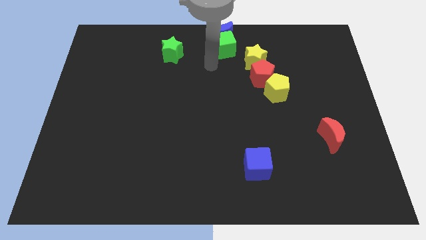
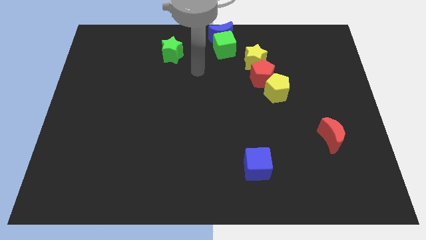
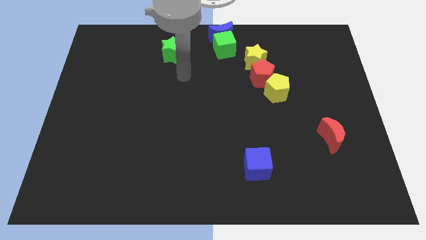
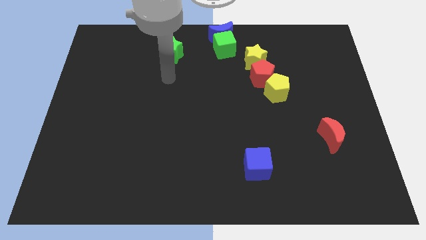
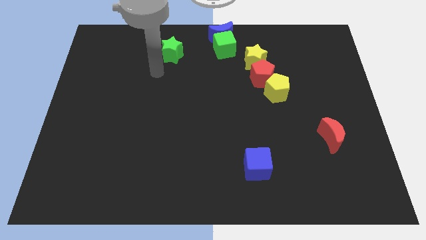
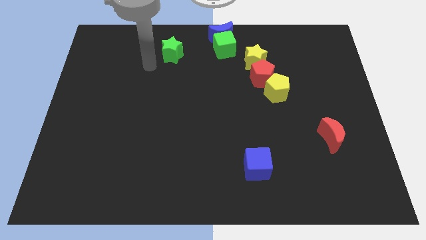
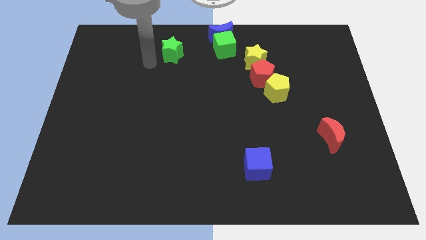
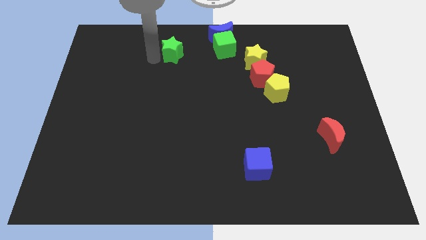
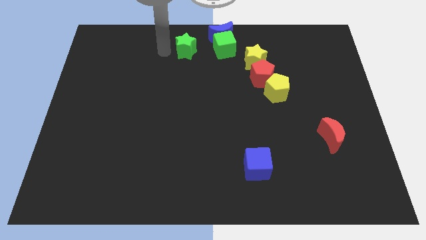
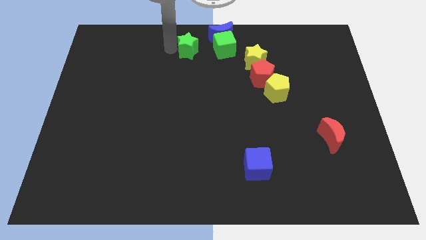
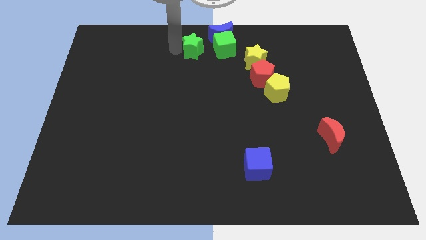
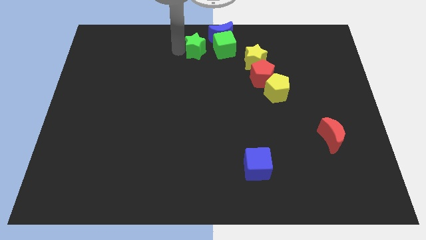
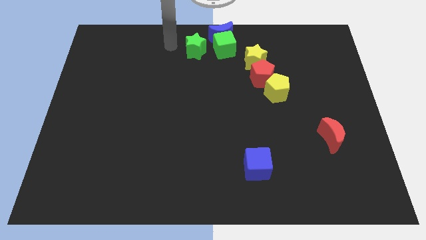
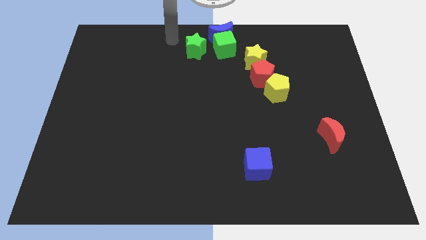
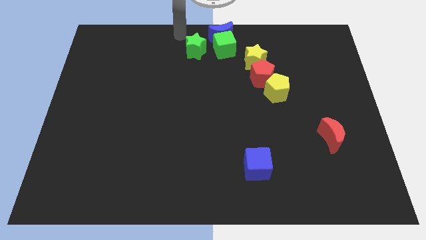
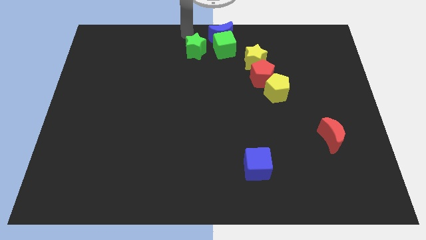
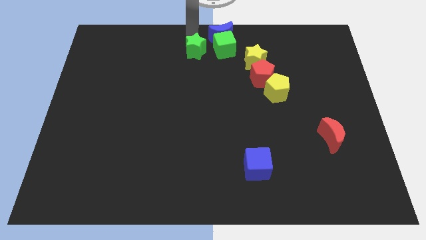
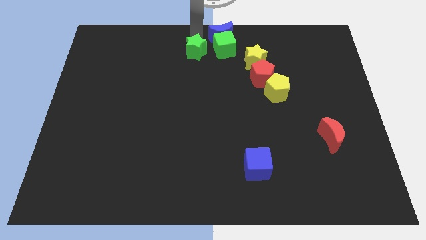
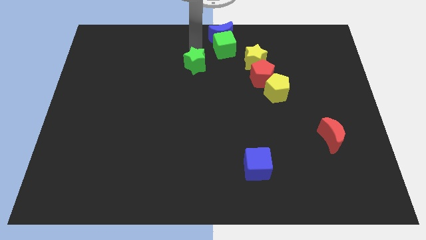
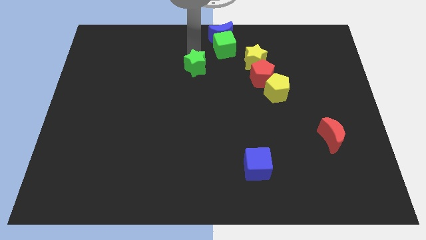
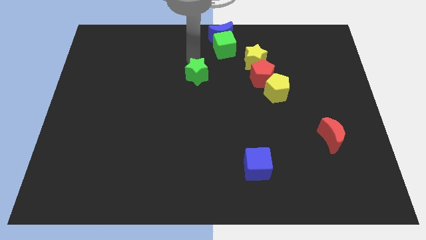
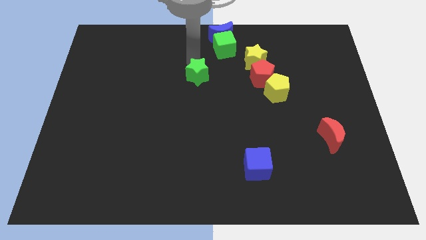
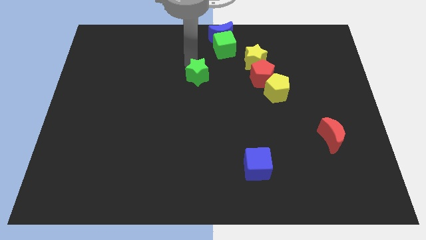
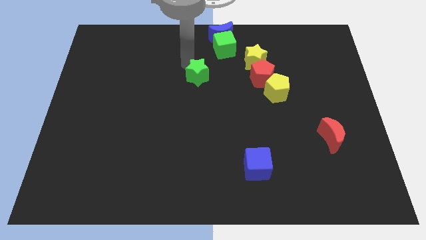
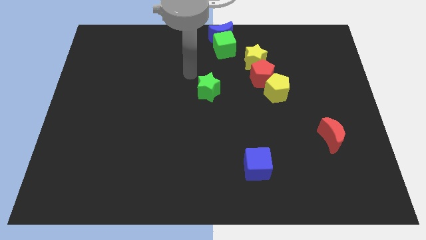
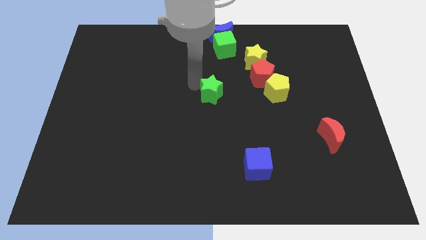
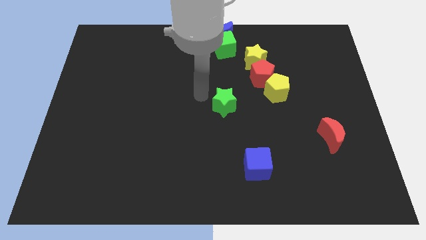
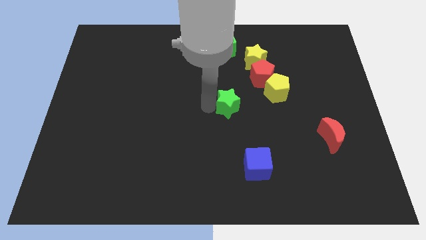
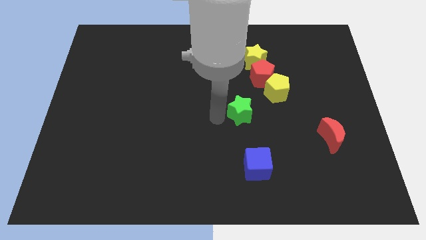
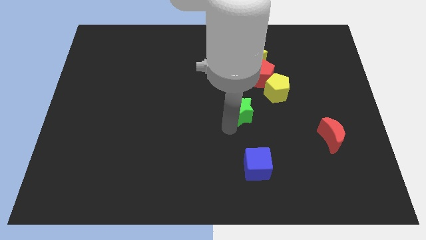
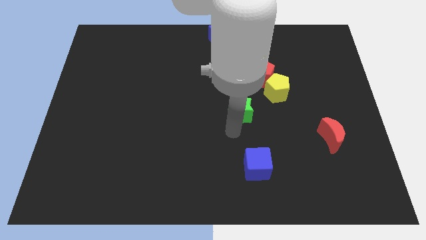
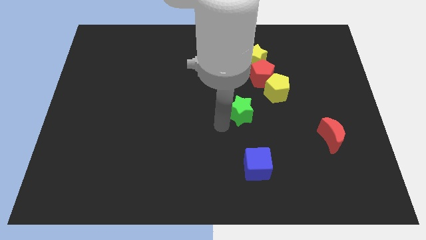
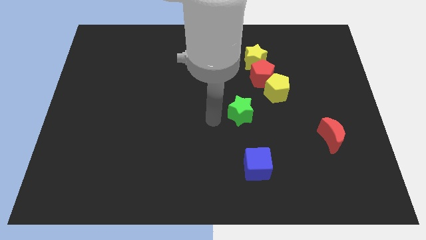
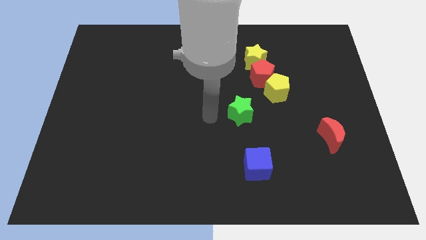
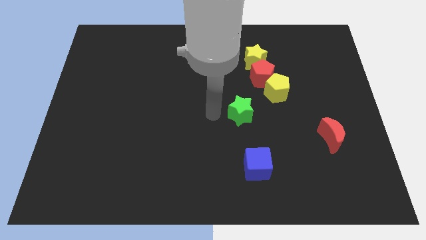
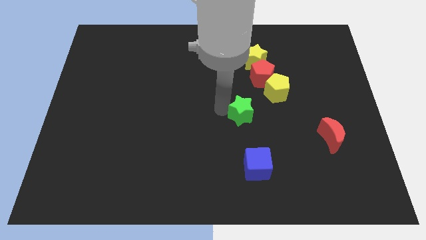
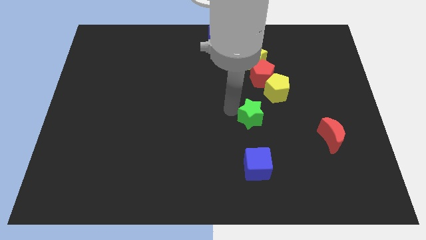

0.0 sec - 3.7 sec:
slide the green star to the top side of the blue cube

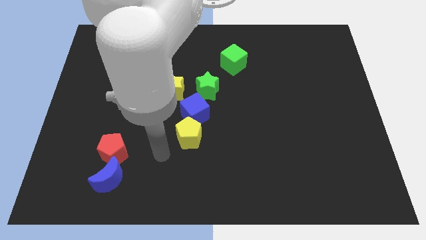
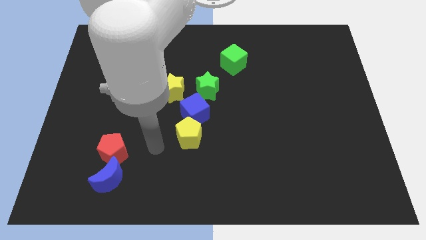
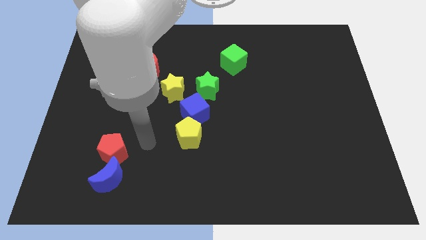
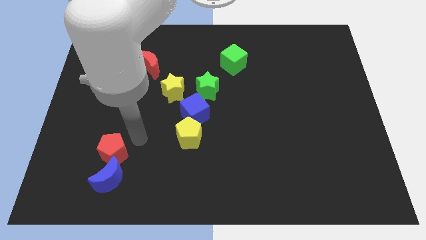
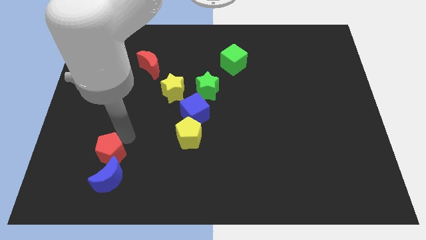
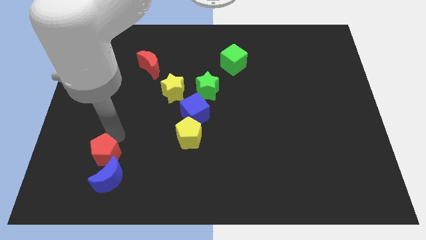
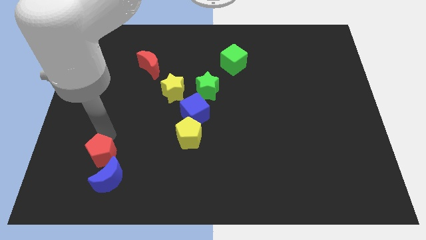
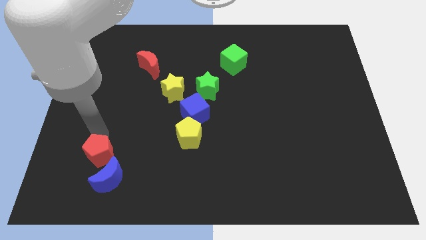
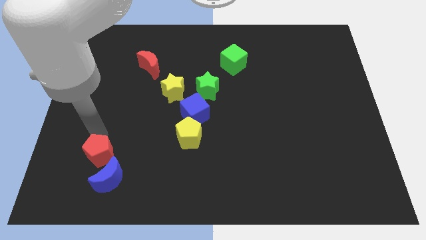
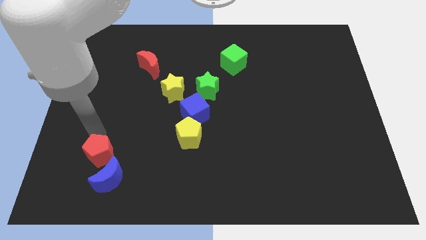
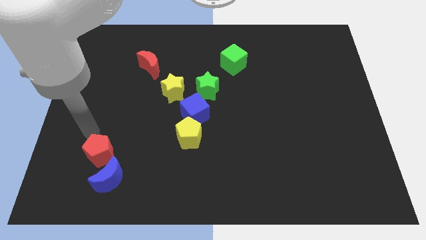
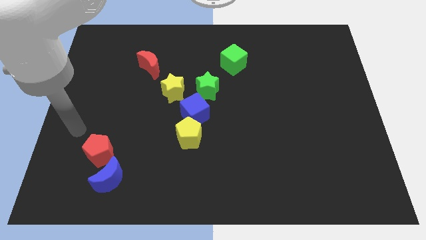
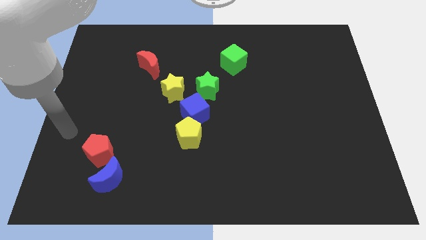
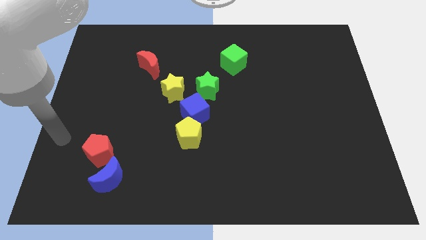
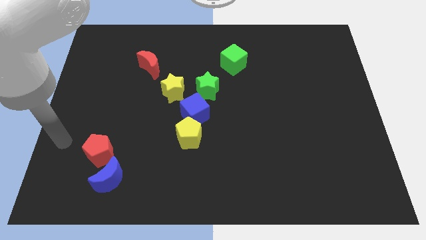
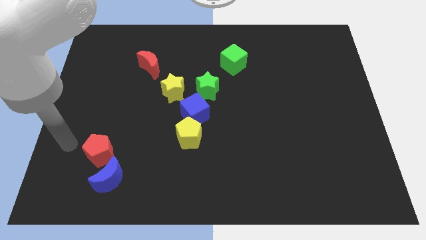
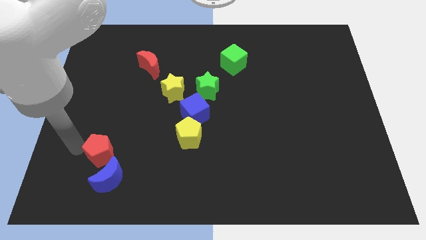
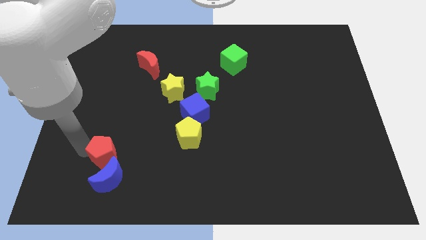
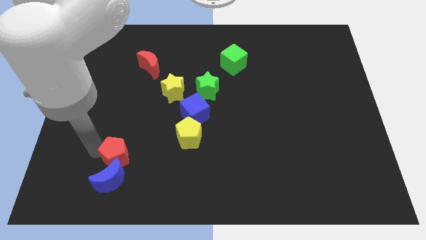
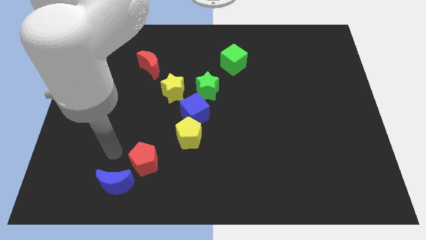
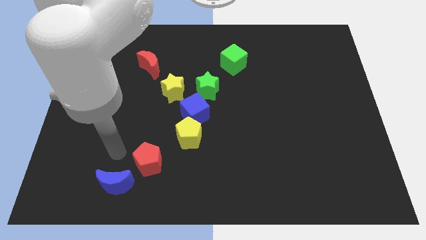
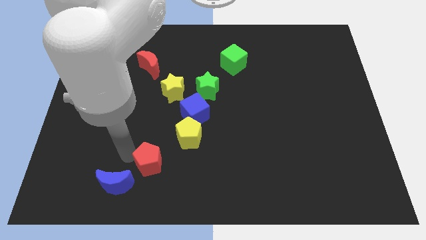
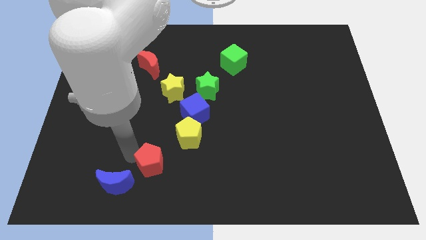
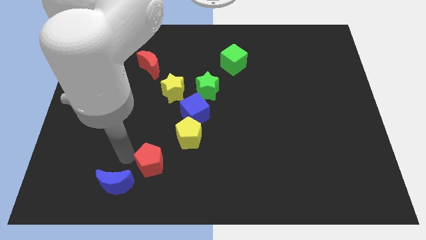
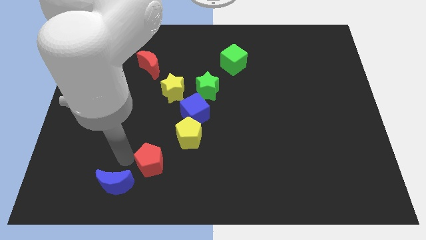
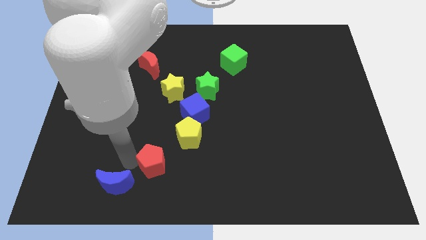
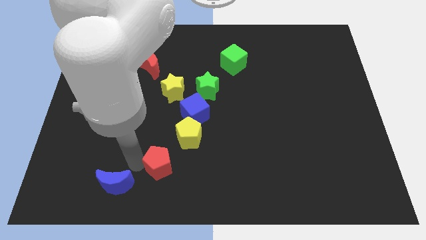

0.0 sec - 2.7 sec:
push red pentagon below yellow star

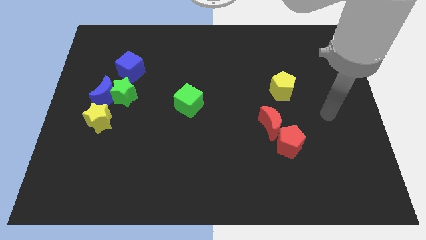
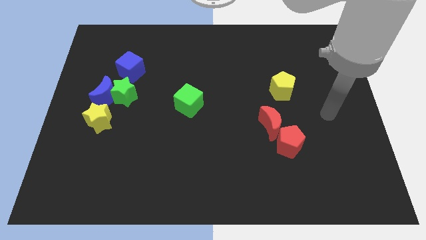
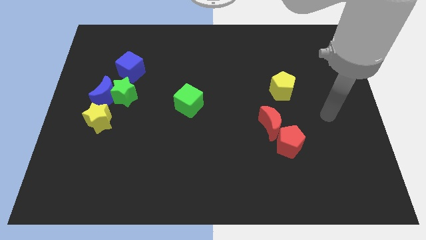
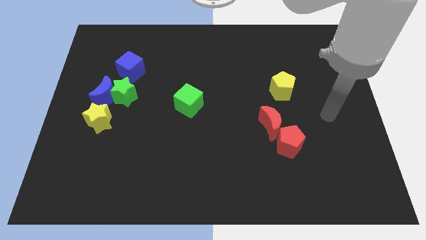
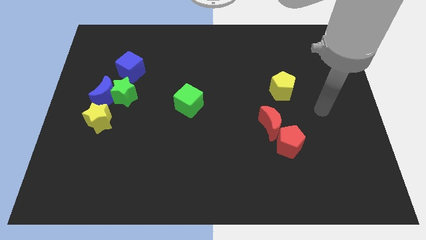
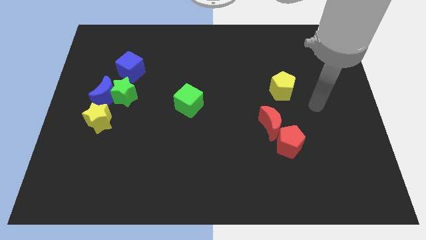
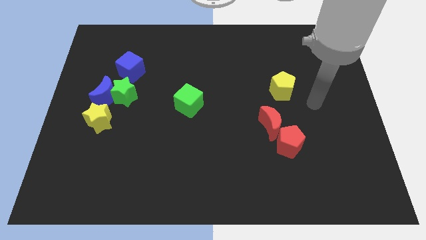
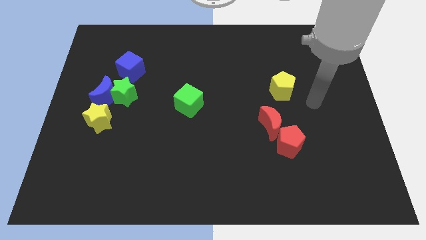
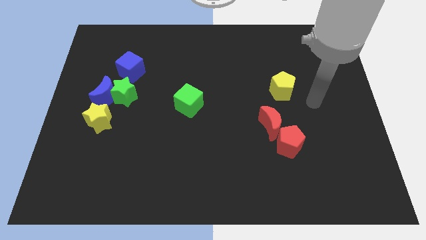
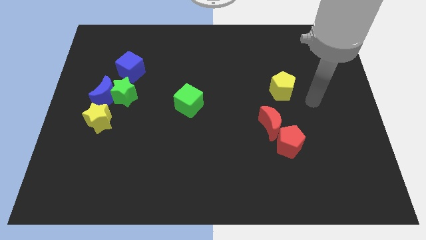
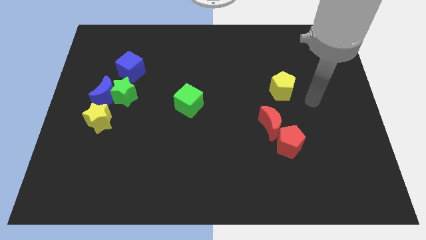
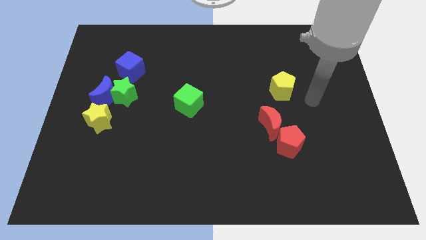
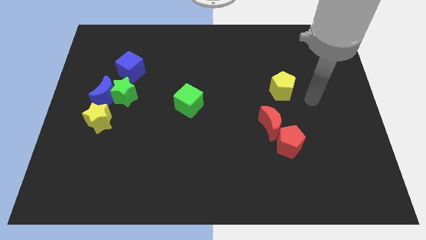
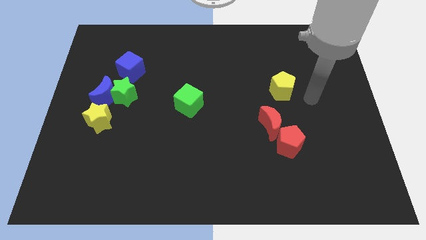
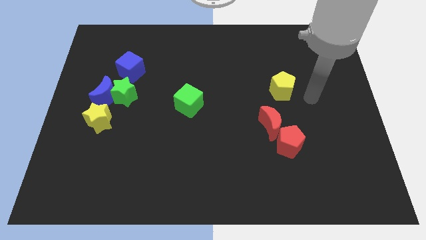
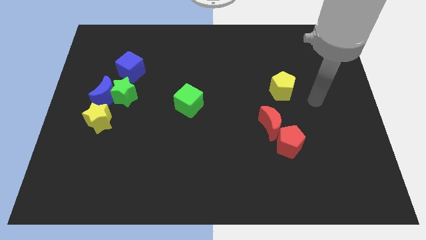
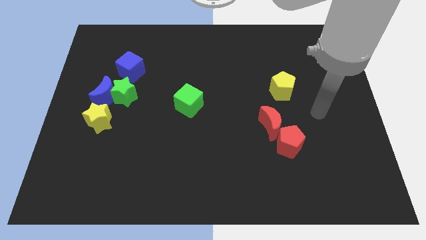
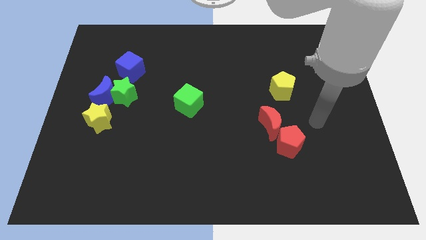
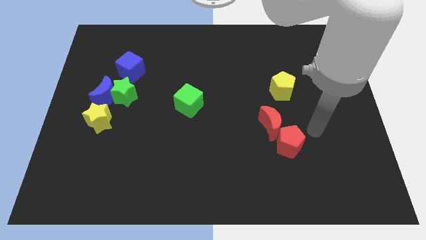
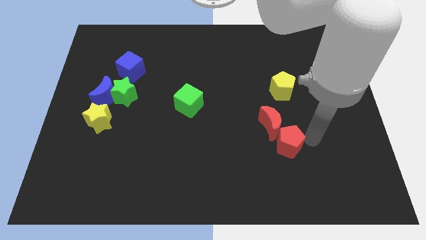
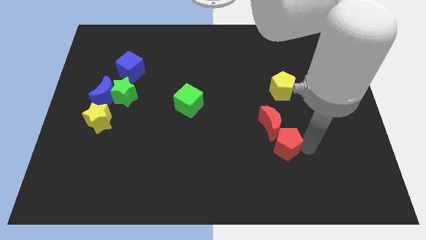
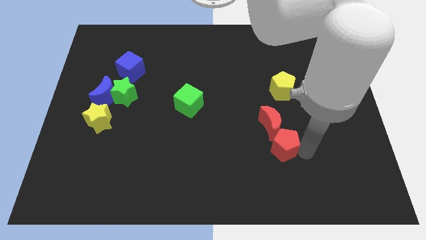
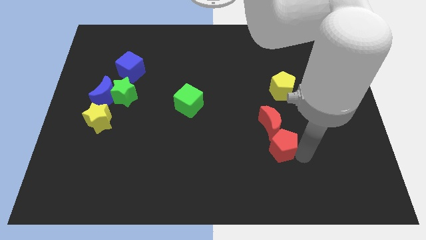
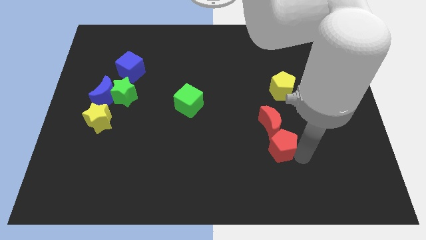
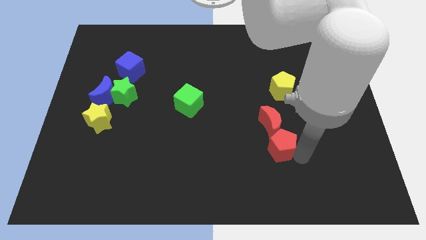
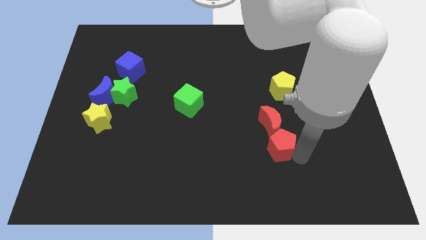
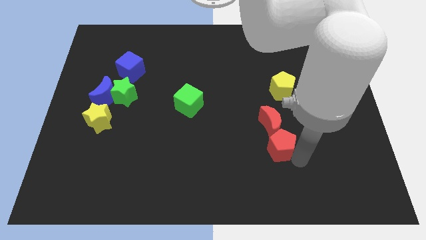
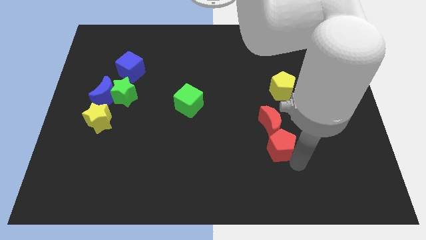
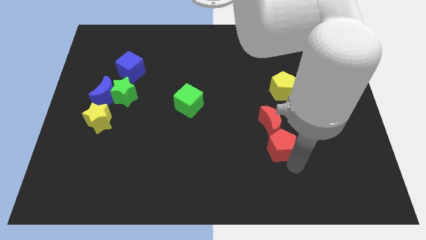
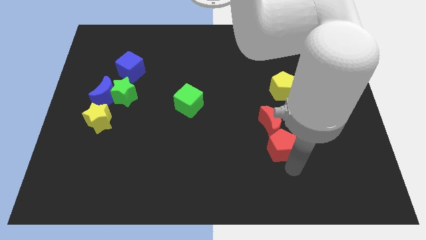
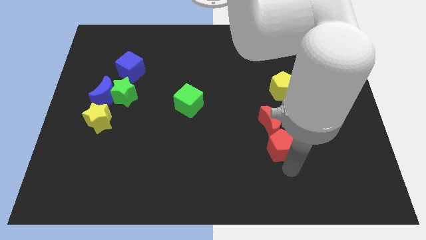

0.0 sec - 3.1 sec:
push the red pentagon to the bottom of the red crescent
